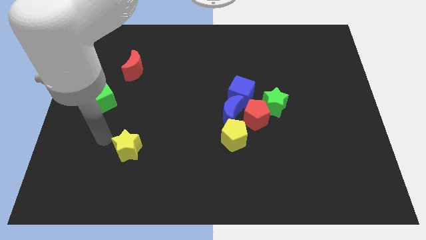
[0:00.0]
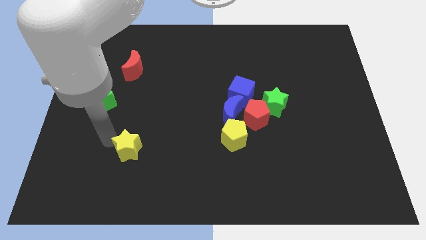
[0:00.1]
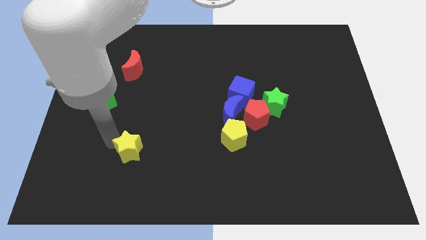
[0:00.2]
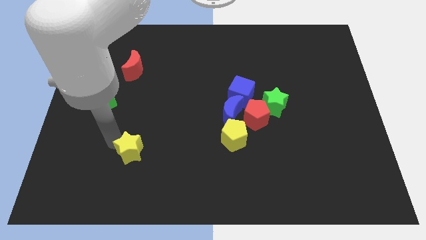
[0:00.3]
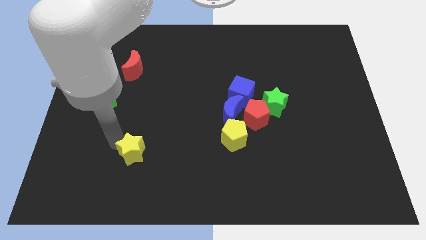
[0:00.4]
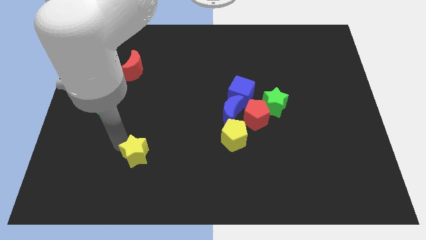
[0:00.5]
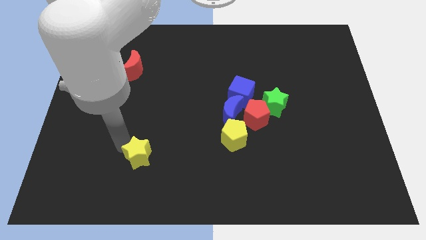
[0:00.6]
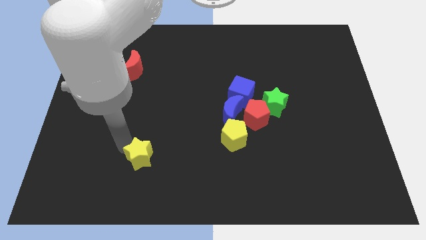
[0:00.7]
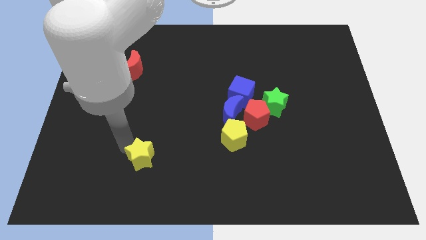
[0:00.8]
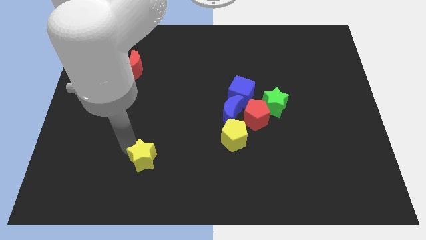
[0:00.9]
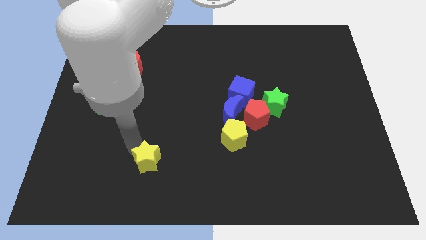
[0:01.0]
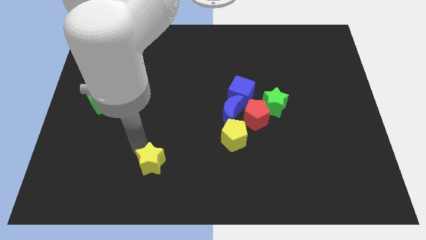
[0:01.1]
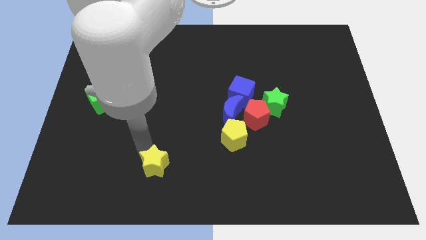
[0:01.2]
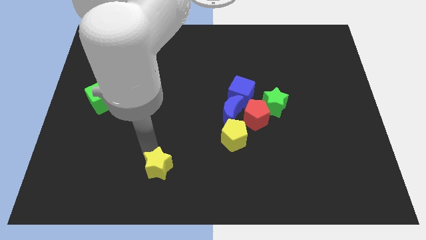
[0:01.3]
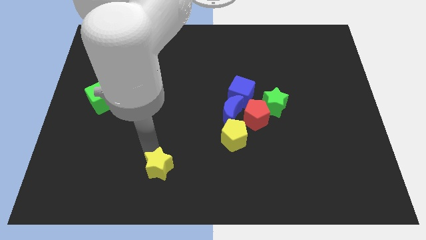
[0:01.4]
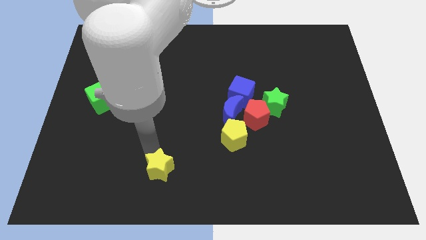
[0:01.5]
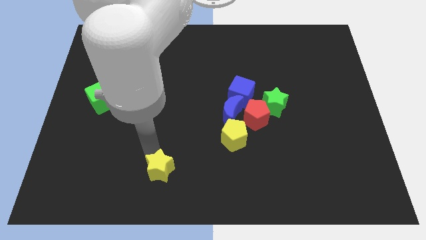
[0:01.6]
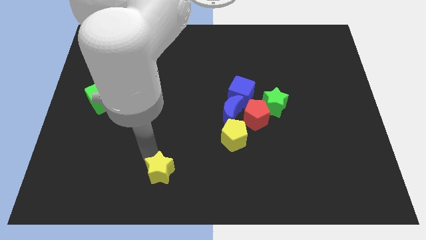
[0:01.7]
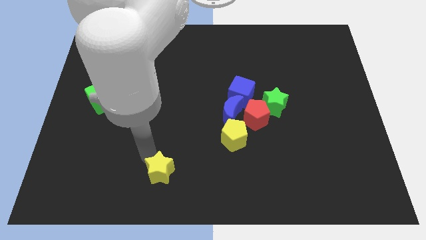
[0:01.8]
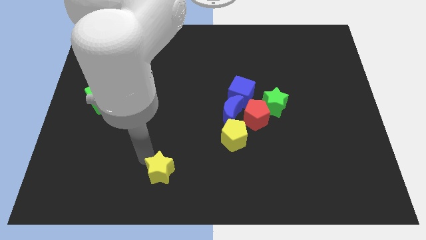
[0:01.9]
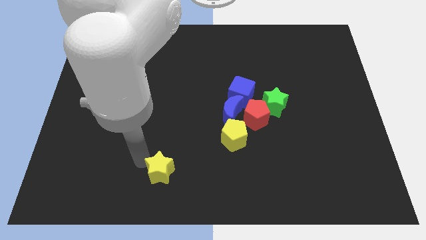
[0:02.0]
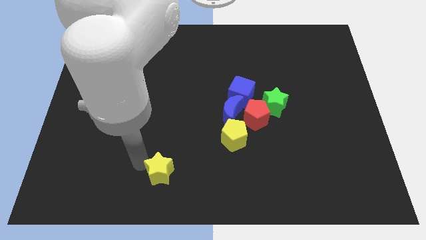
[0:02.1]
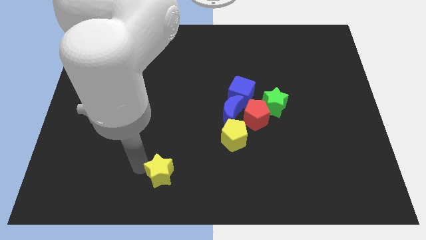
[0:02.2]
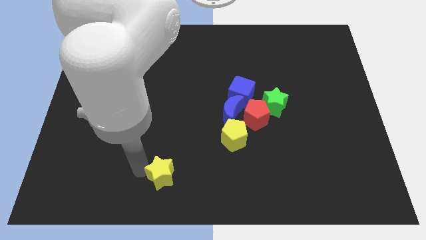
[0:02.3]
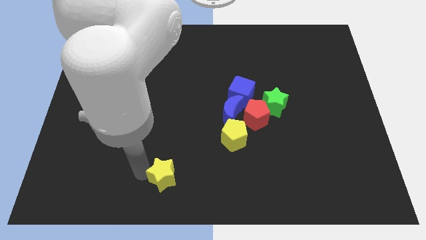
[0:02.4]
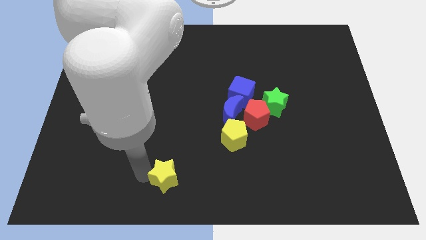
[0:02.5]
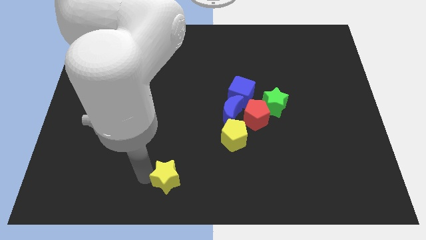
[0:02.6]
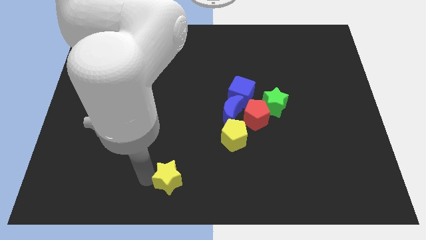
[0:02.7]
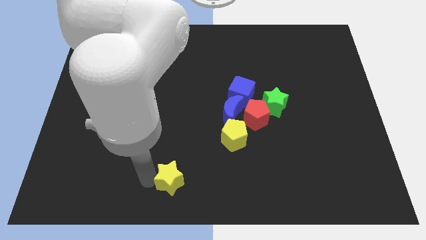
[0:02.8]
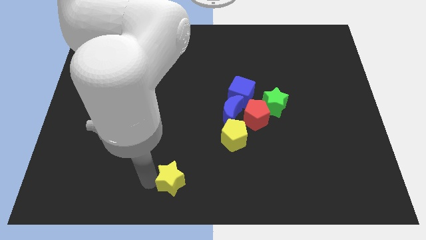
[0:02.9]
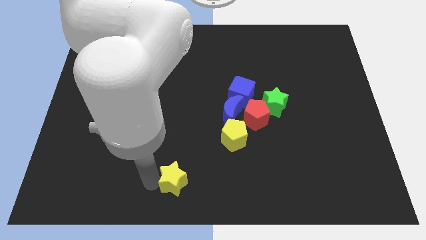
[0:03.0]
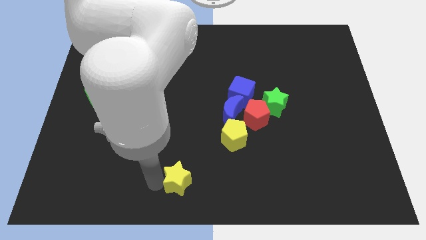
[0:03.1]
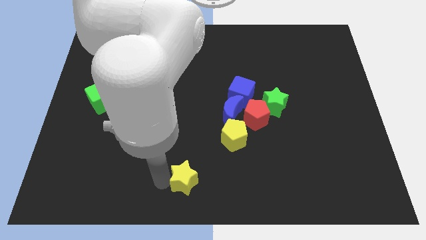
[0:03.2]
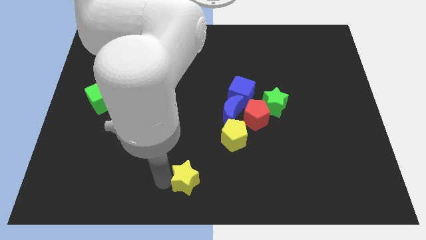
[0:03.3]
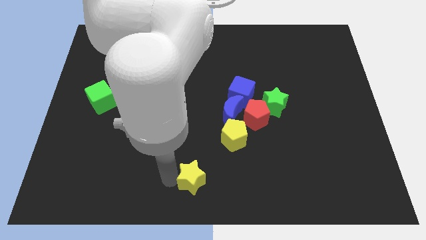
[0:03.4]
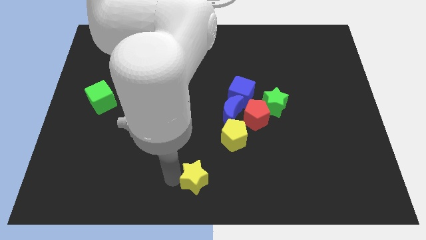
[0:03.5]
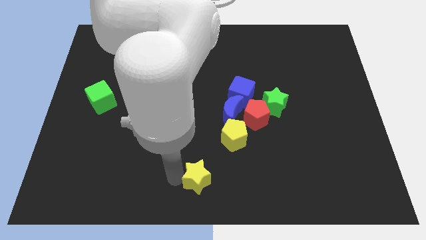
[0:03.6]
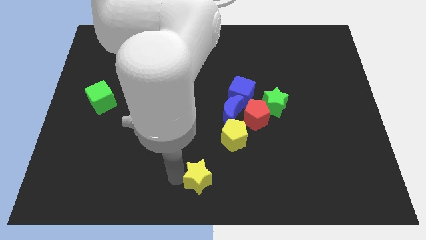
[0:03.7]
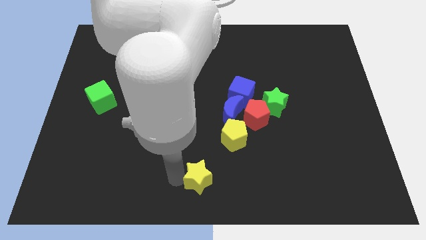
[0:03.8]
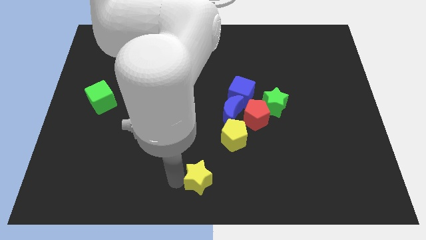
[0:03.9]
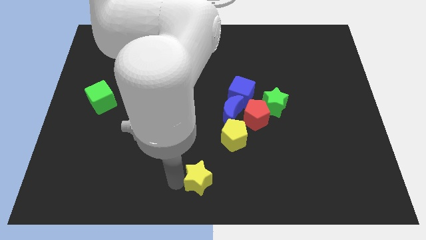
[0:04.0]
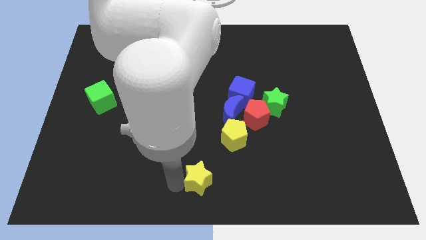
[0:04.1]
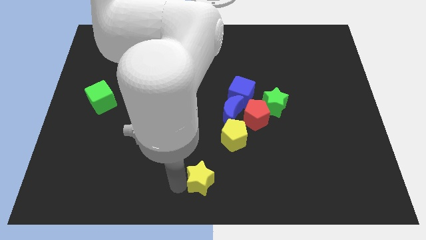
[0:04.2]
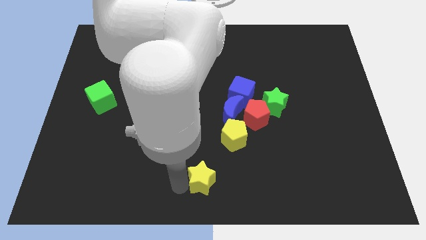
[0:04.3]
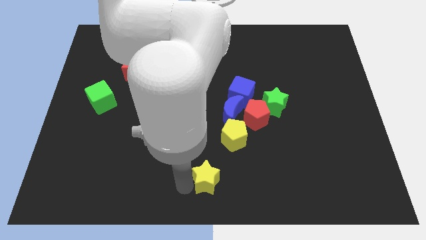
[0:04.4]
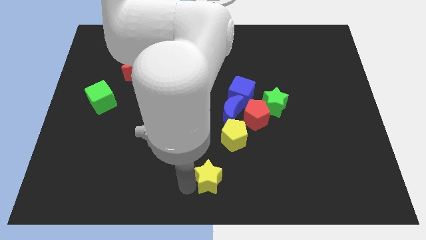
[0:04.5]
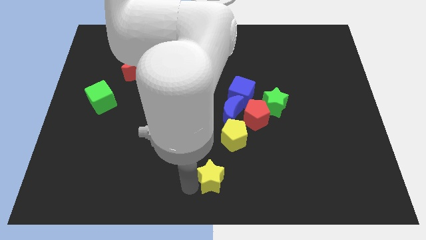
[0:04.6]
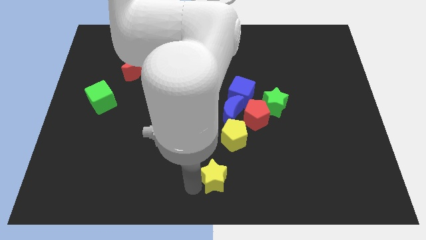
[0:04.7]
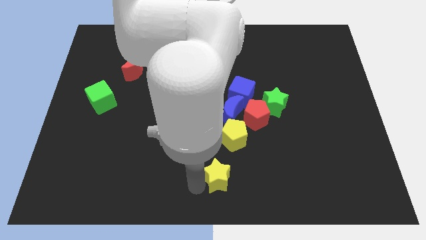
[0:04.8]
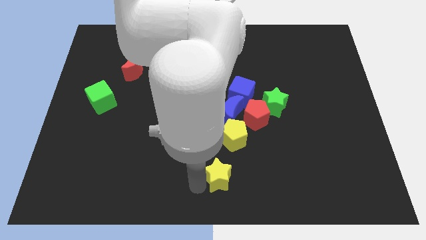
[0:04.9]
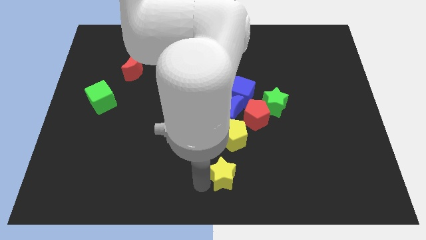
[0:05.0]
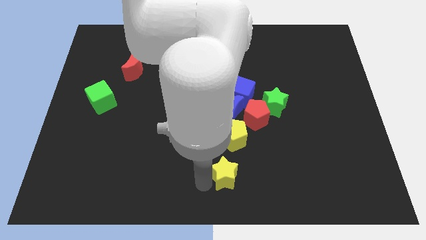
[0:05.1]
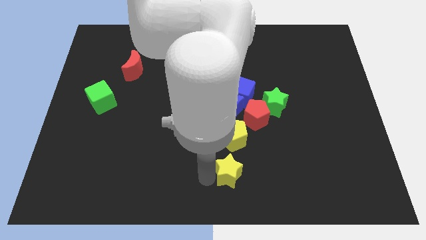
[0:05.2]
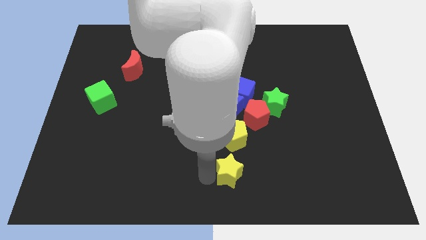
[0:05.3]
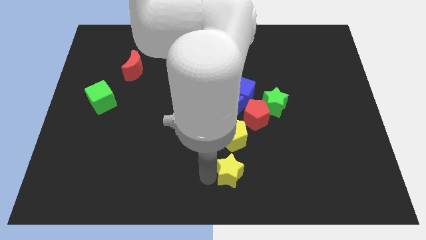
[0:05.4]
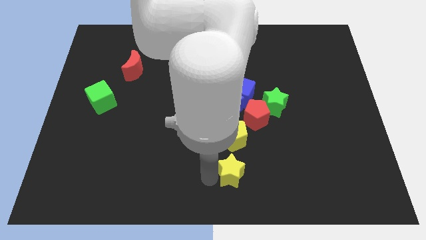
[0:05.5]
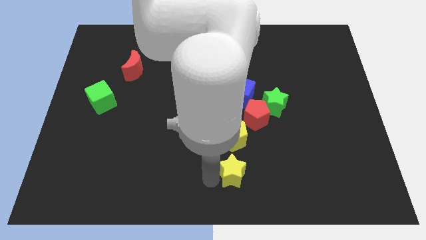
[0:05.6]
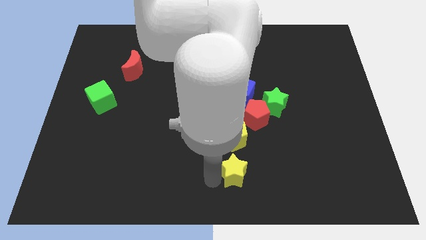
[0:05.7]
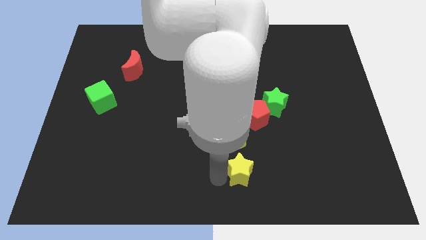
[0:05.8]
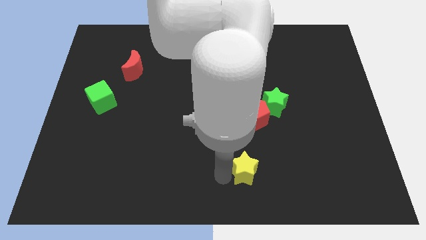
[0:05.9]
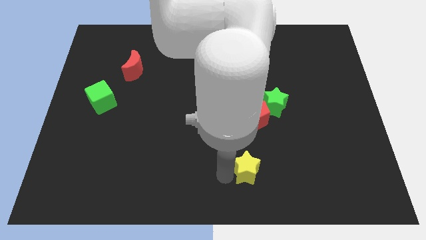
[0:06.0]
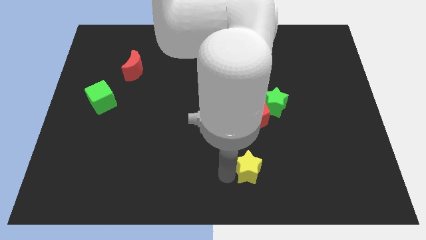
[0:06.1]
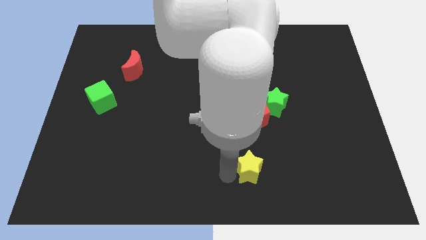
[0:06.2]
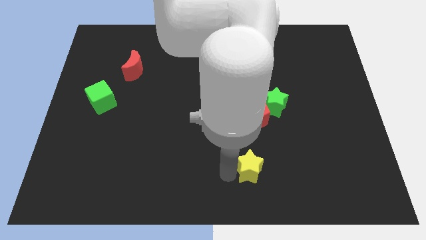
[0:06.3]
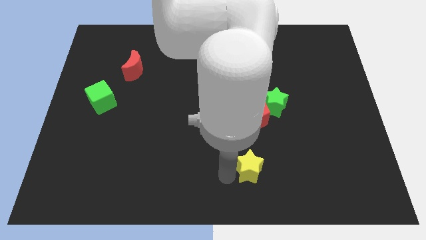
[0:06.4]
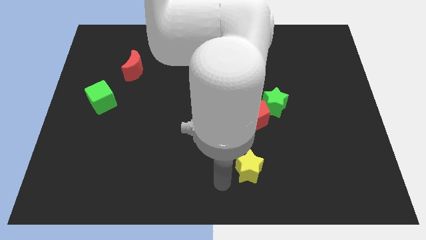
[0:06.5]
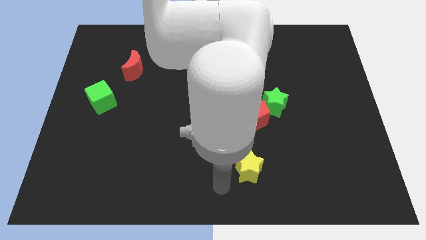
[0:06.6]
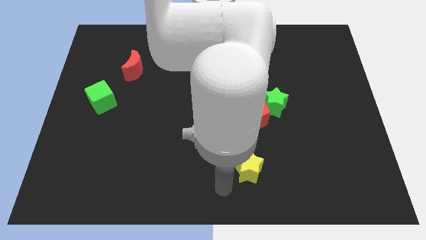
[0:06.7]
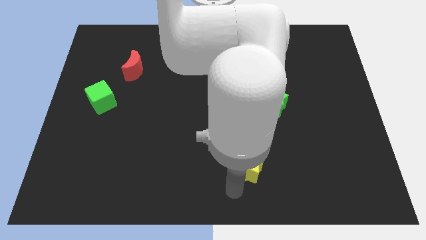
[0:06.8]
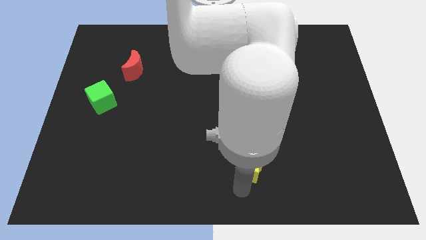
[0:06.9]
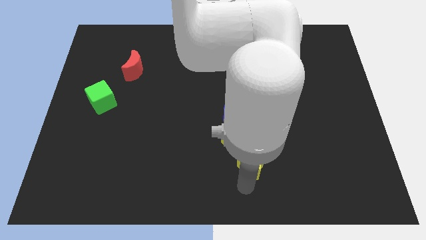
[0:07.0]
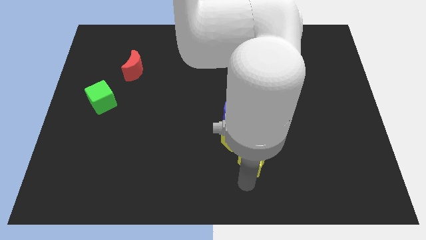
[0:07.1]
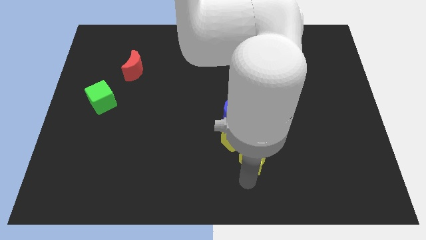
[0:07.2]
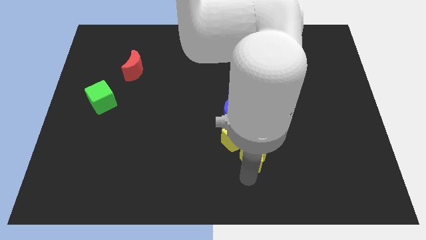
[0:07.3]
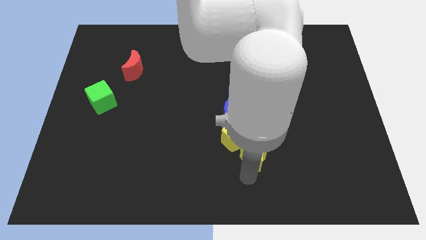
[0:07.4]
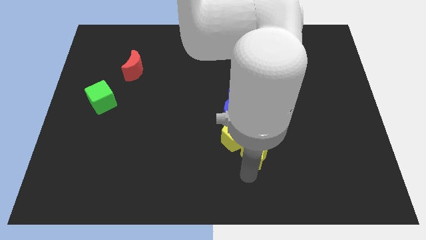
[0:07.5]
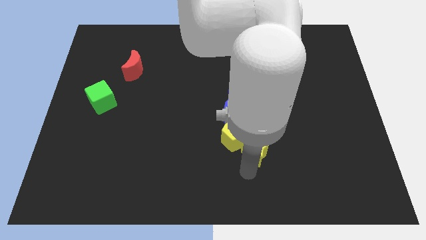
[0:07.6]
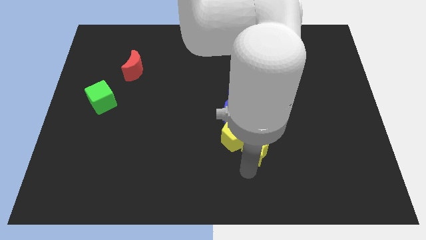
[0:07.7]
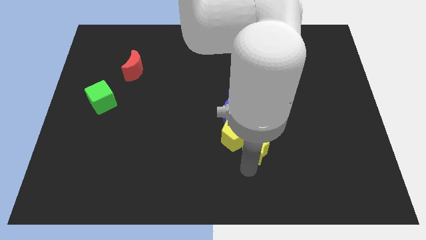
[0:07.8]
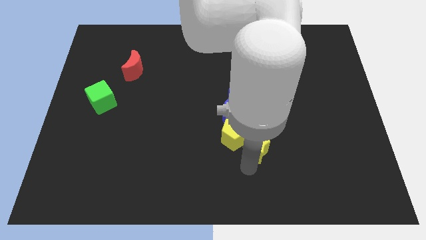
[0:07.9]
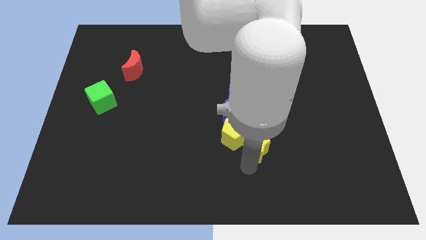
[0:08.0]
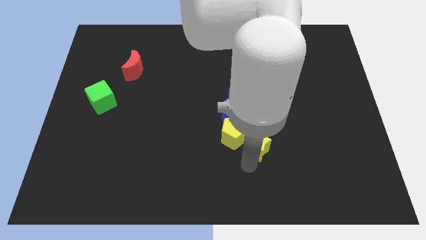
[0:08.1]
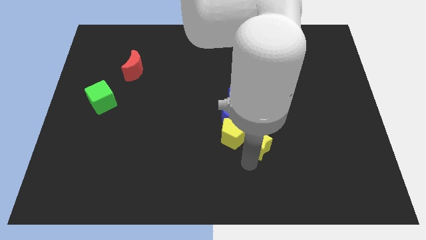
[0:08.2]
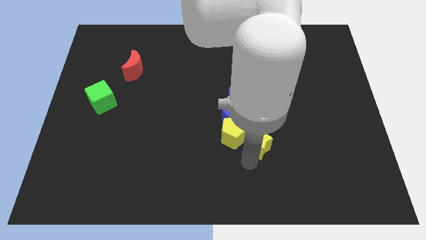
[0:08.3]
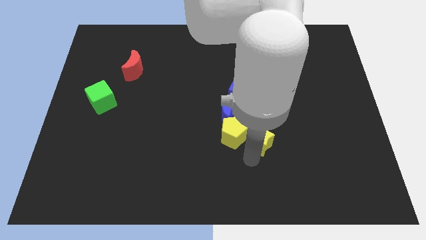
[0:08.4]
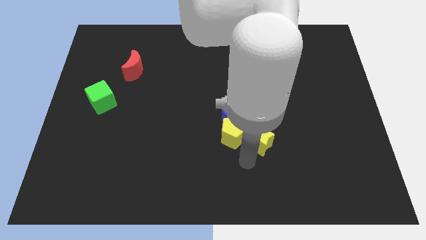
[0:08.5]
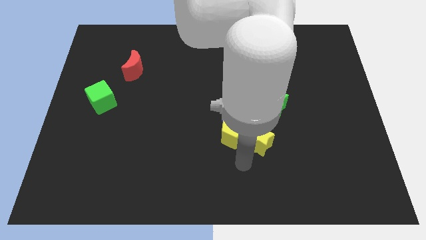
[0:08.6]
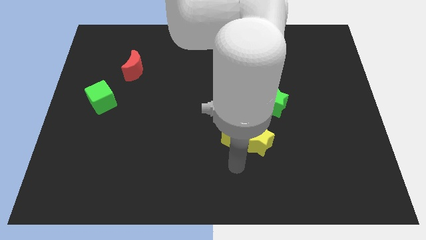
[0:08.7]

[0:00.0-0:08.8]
push yellow star into the group of stars

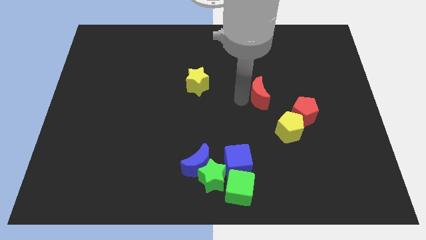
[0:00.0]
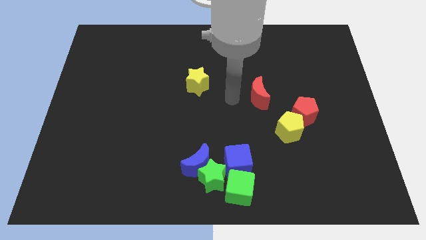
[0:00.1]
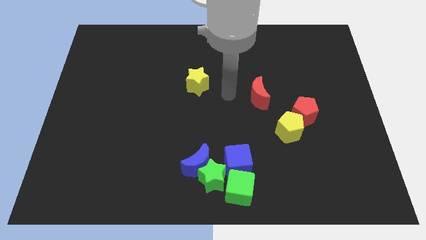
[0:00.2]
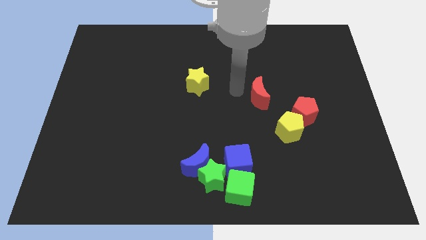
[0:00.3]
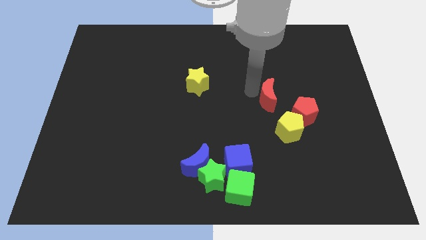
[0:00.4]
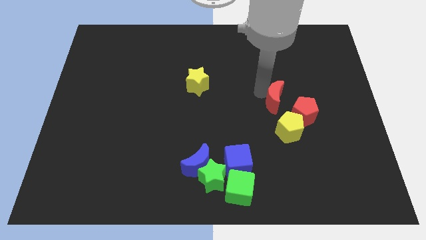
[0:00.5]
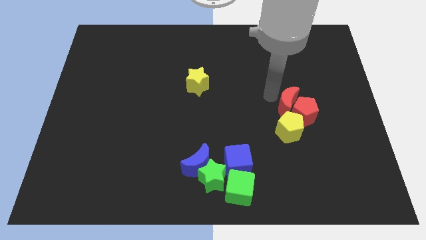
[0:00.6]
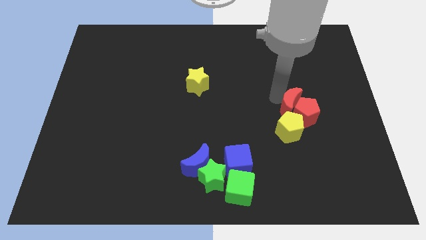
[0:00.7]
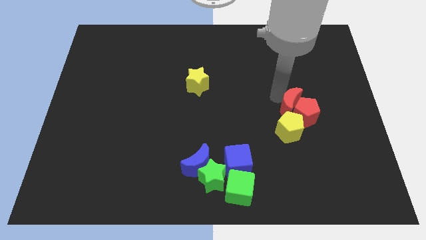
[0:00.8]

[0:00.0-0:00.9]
place the red crescent above the red pentagon
